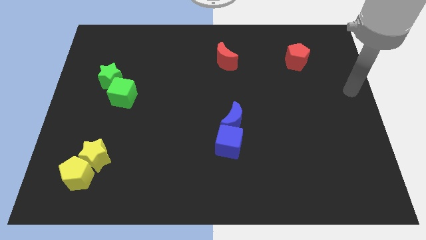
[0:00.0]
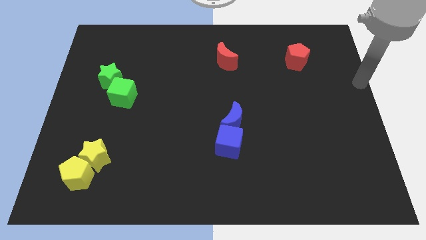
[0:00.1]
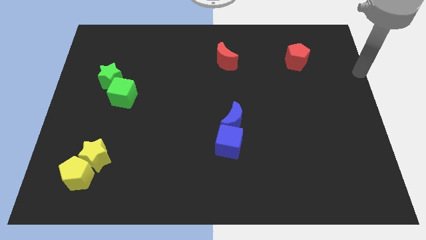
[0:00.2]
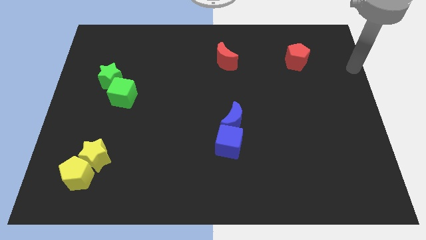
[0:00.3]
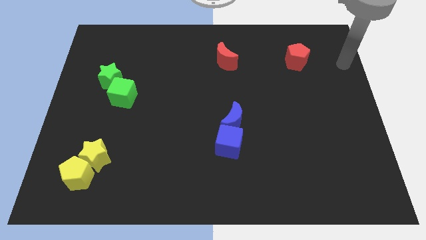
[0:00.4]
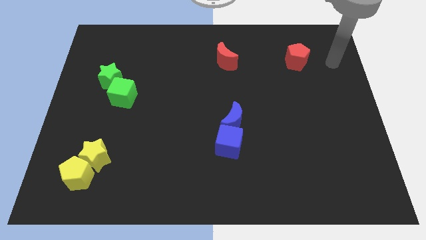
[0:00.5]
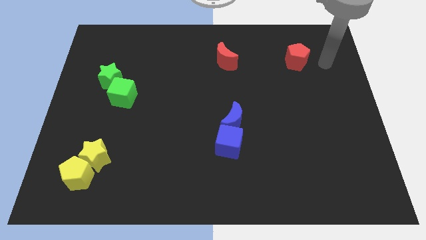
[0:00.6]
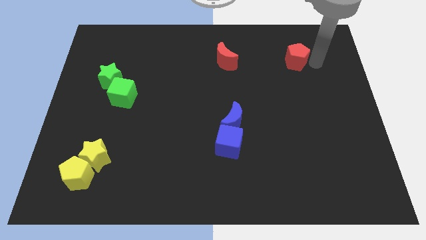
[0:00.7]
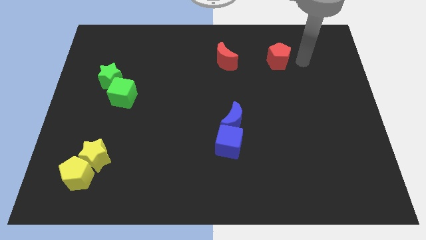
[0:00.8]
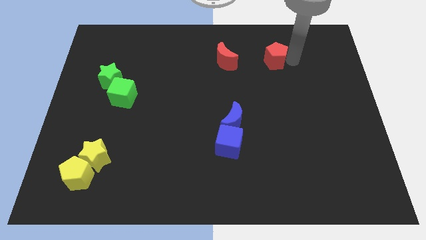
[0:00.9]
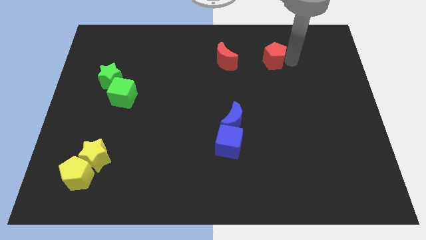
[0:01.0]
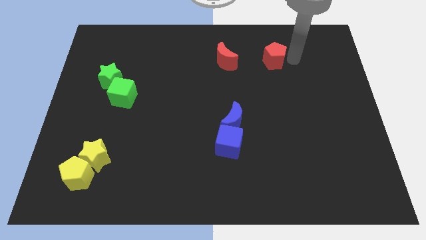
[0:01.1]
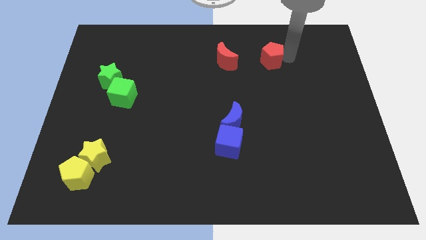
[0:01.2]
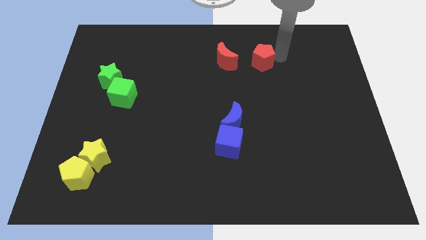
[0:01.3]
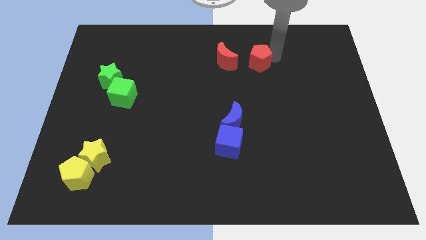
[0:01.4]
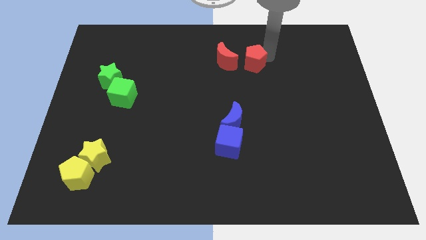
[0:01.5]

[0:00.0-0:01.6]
push the red pentagon towards the red crescent

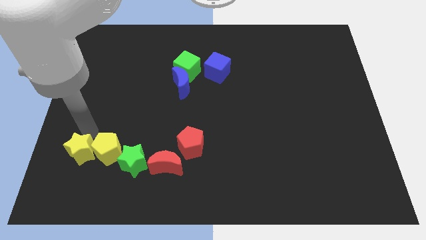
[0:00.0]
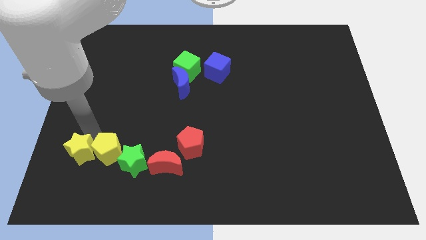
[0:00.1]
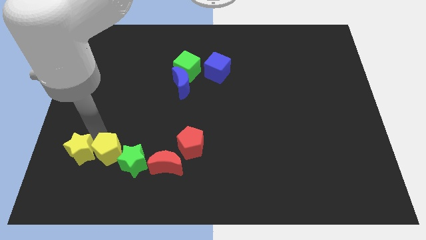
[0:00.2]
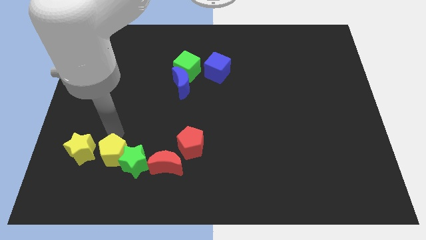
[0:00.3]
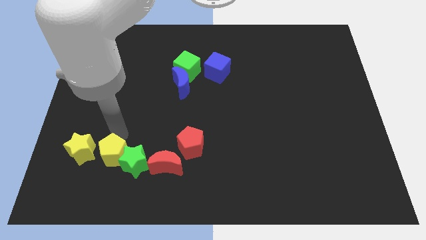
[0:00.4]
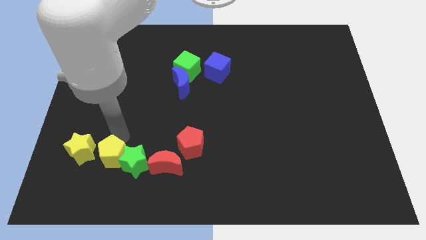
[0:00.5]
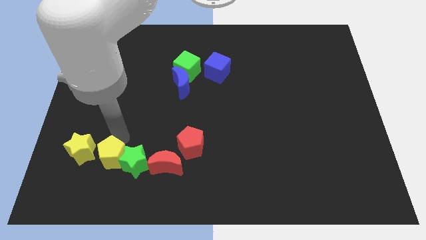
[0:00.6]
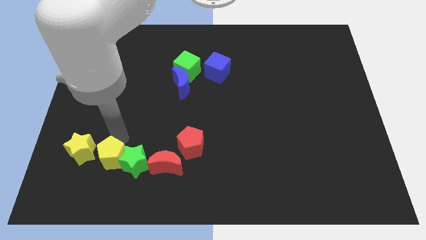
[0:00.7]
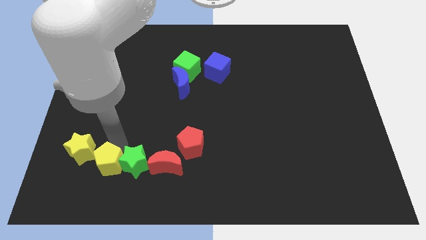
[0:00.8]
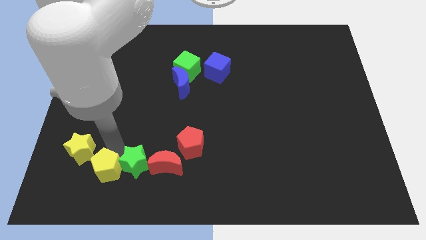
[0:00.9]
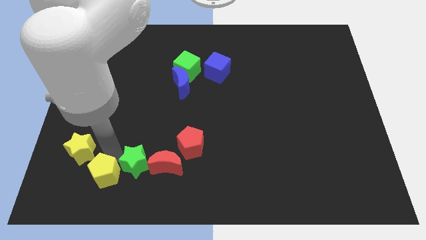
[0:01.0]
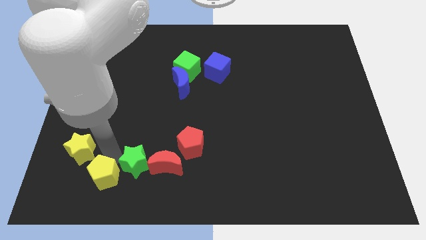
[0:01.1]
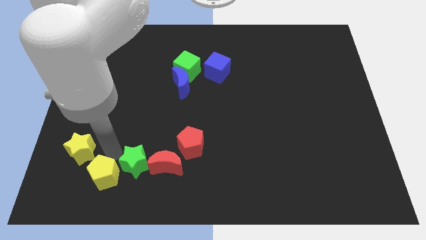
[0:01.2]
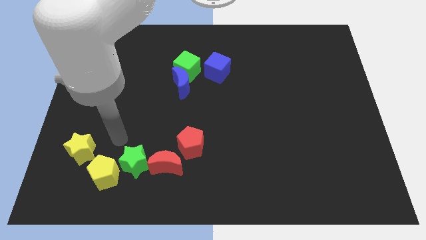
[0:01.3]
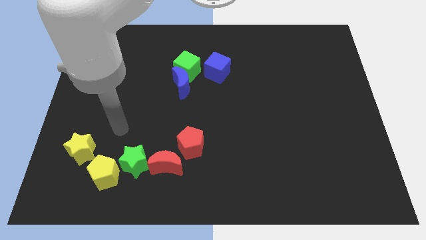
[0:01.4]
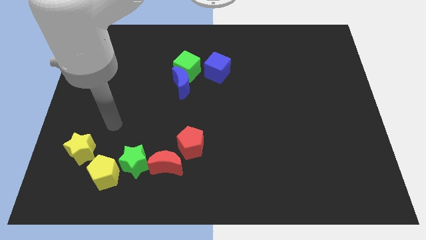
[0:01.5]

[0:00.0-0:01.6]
slide the yellow pentagon down slightly

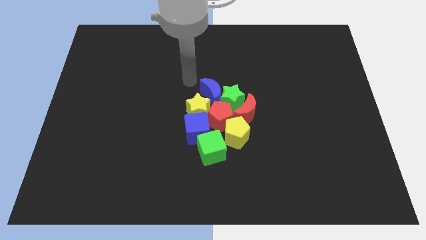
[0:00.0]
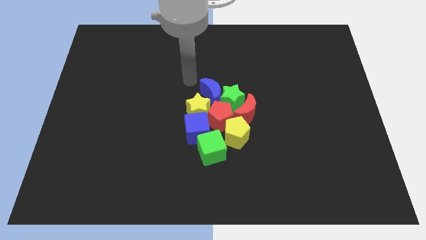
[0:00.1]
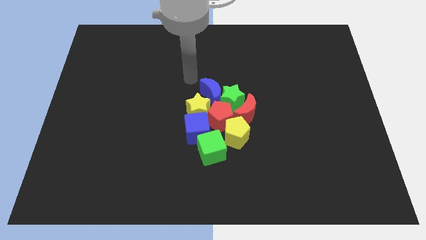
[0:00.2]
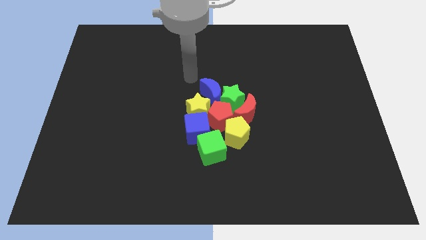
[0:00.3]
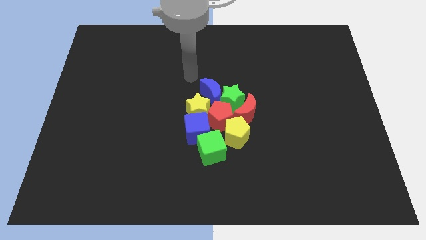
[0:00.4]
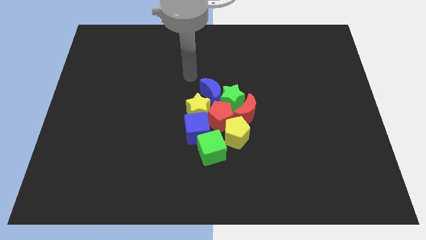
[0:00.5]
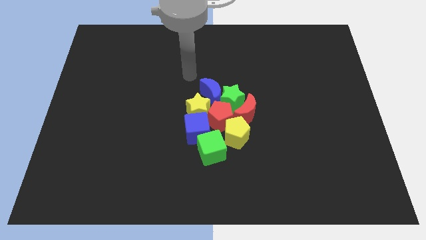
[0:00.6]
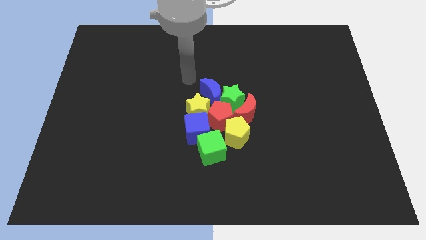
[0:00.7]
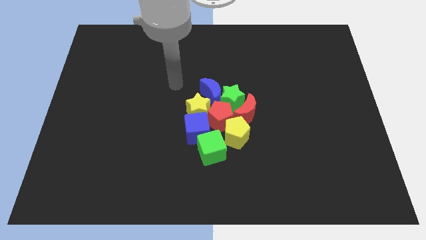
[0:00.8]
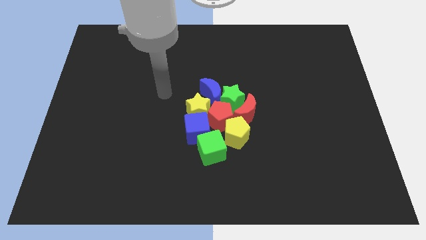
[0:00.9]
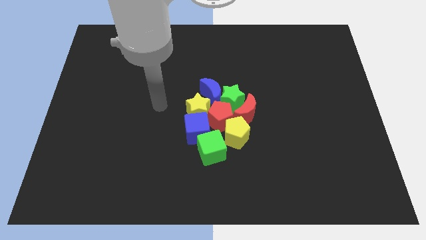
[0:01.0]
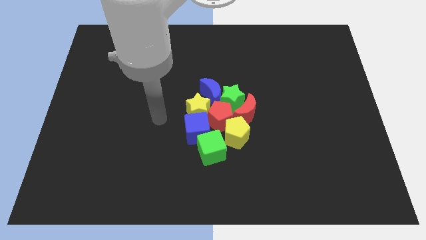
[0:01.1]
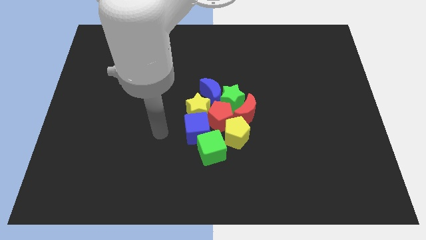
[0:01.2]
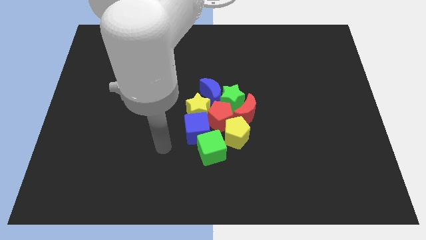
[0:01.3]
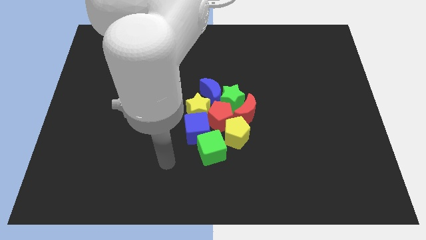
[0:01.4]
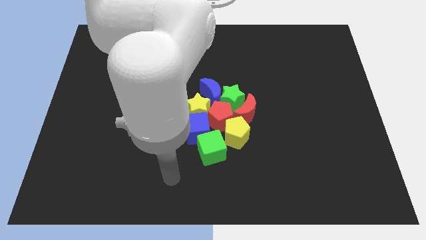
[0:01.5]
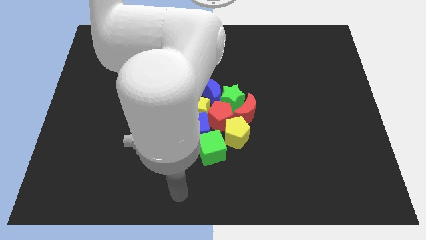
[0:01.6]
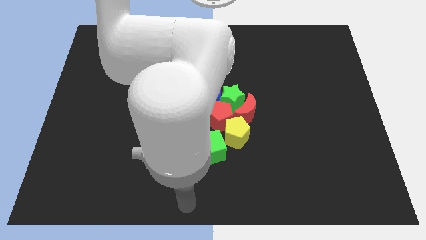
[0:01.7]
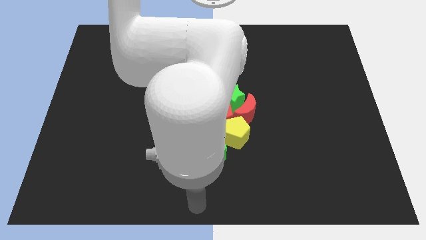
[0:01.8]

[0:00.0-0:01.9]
move your arm from the center to the bottom center of the board

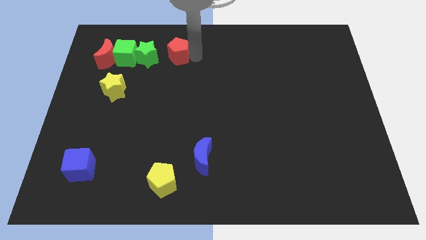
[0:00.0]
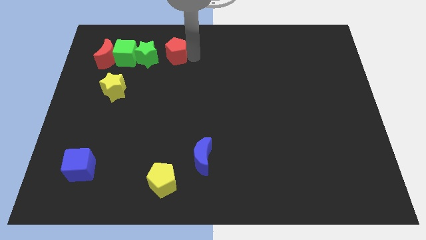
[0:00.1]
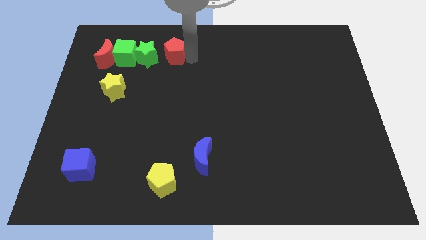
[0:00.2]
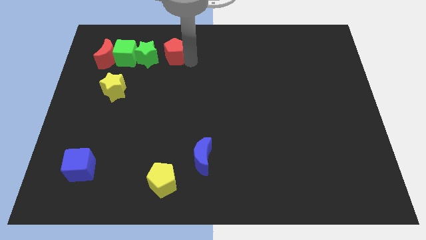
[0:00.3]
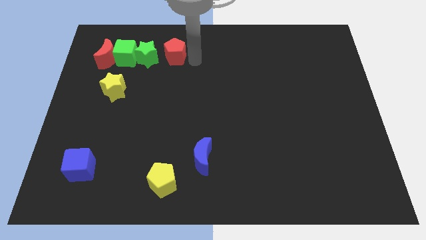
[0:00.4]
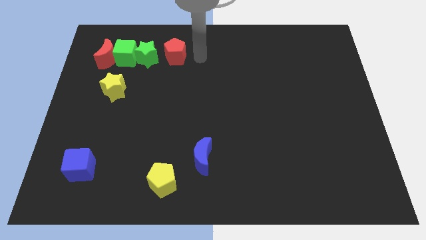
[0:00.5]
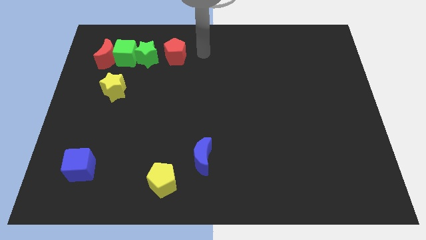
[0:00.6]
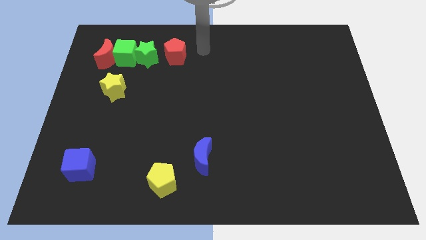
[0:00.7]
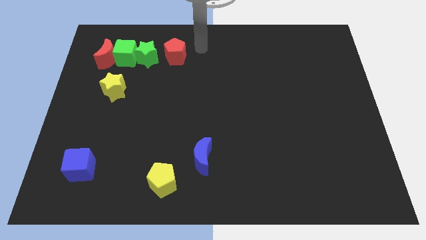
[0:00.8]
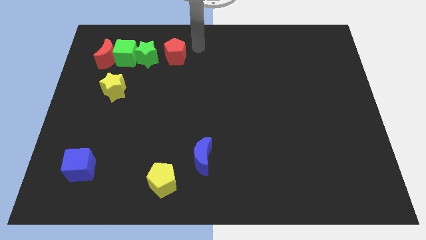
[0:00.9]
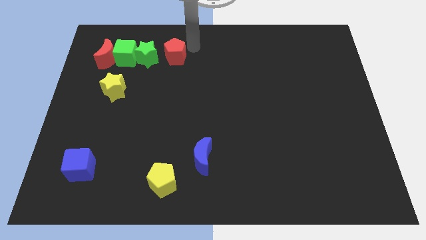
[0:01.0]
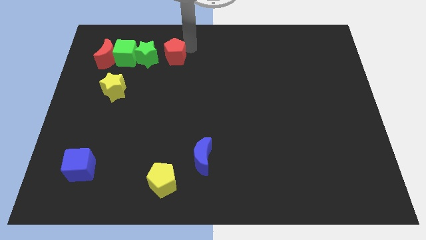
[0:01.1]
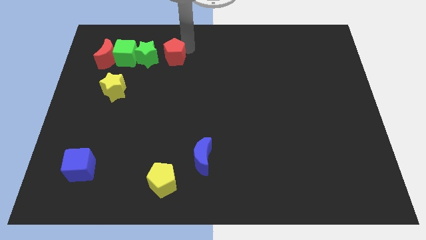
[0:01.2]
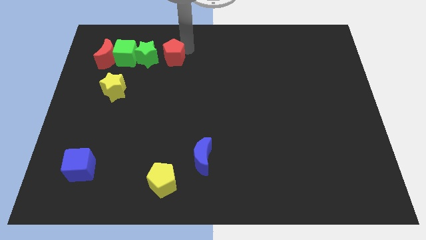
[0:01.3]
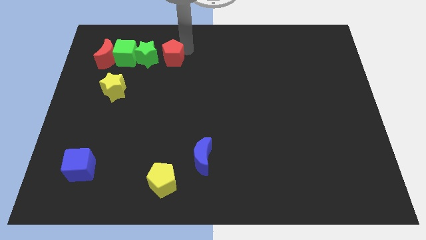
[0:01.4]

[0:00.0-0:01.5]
move the red pentagon to the right side of the green star

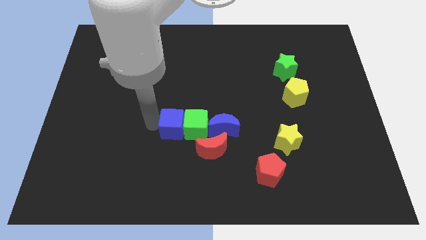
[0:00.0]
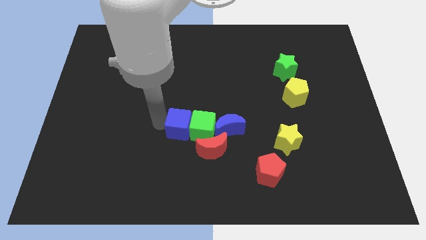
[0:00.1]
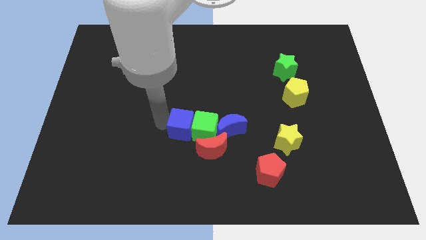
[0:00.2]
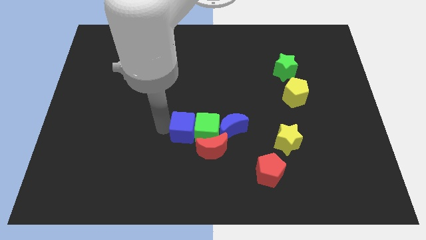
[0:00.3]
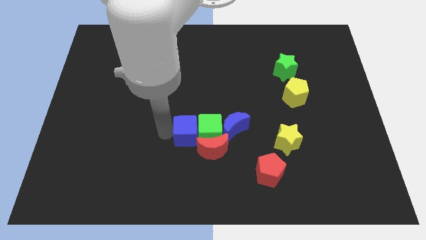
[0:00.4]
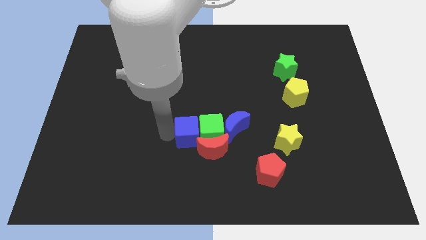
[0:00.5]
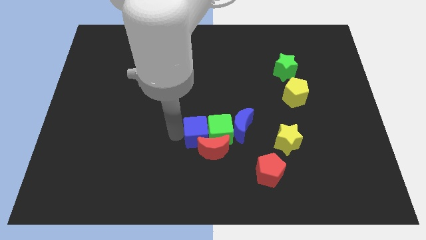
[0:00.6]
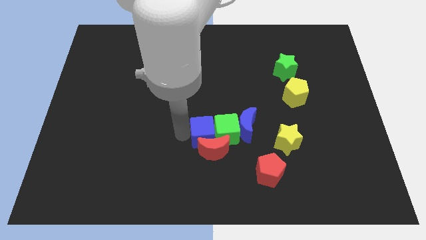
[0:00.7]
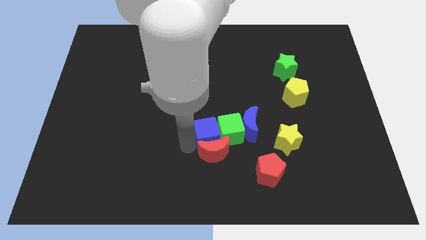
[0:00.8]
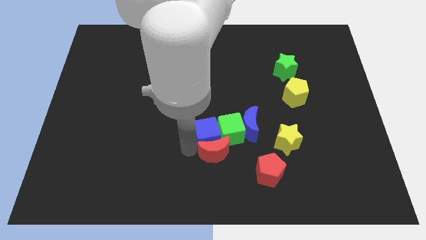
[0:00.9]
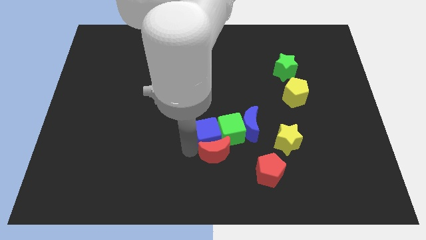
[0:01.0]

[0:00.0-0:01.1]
place blue cube above red moon

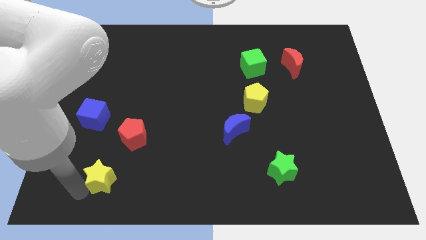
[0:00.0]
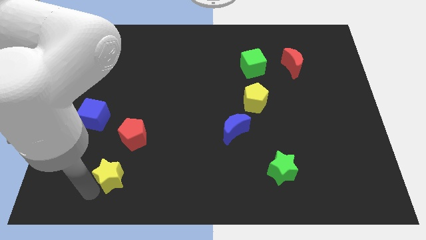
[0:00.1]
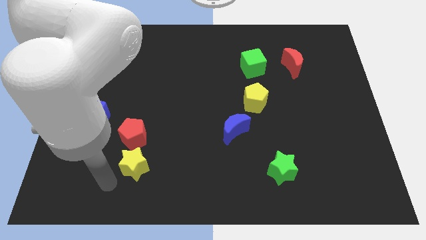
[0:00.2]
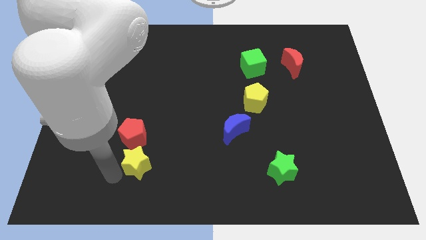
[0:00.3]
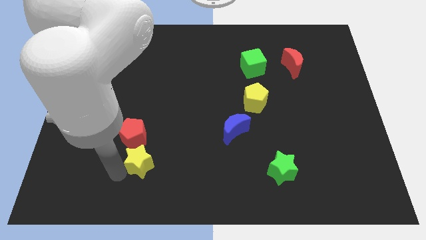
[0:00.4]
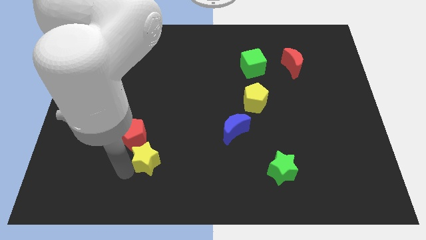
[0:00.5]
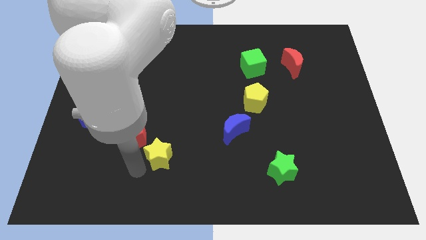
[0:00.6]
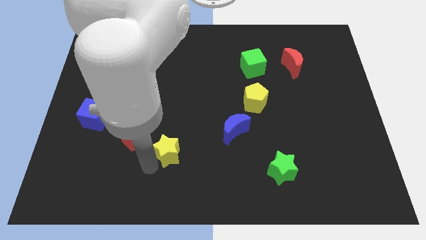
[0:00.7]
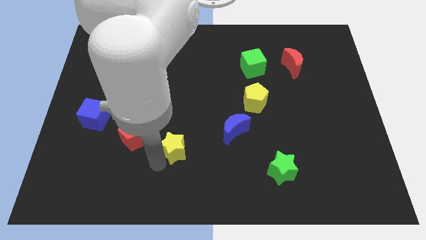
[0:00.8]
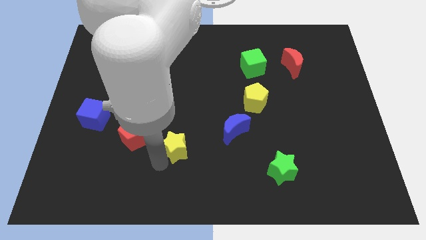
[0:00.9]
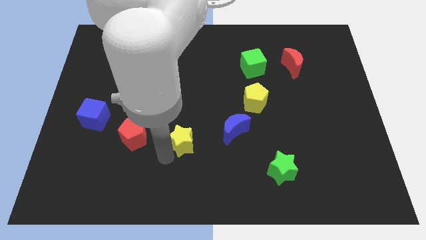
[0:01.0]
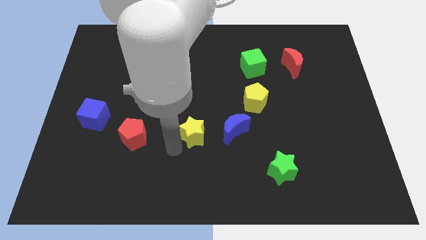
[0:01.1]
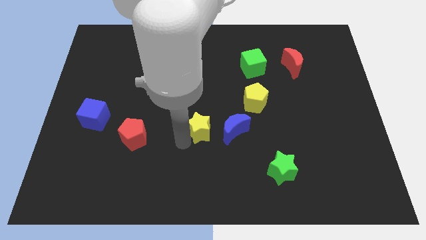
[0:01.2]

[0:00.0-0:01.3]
move the yellow star to the left of the blue crescent
